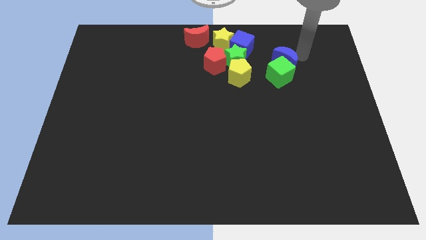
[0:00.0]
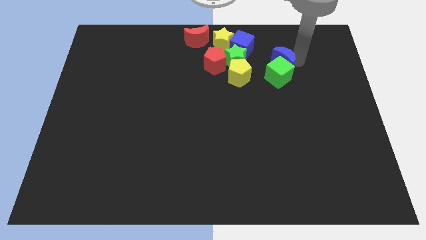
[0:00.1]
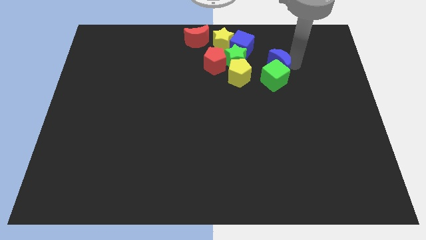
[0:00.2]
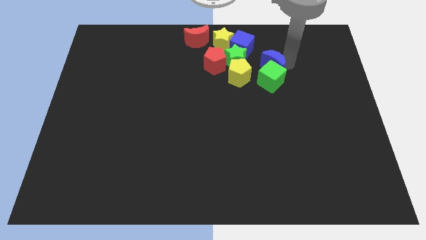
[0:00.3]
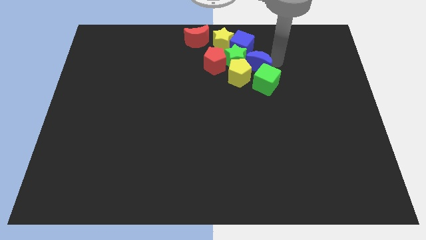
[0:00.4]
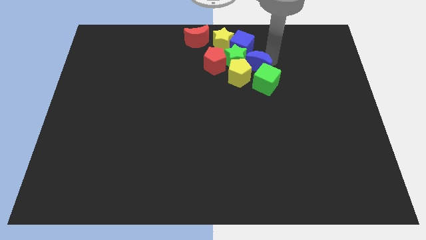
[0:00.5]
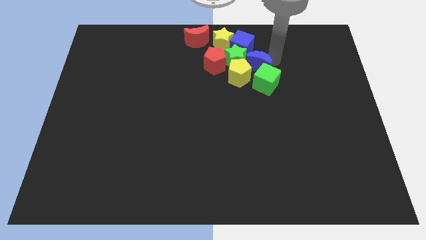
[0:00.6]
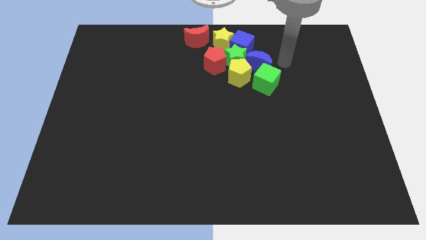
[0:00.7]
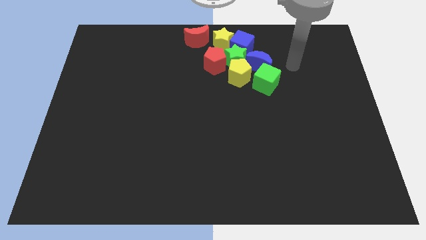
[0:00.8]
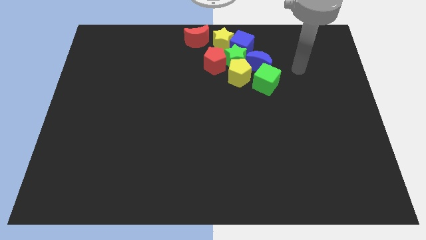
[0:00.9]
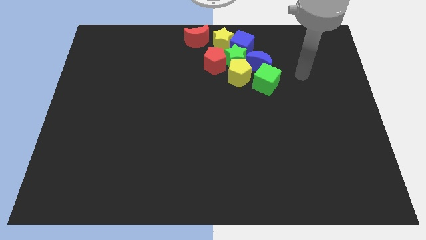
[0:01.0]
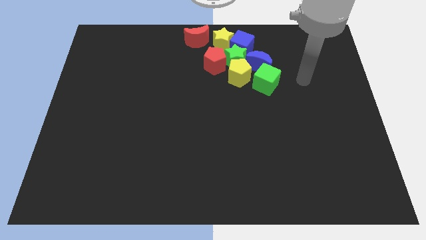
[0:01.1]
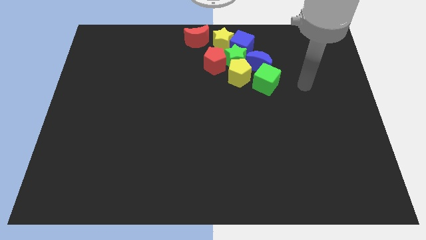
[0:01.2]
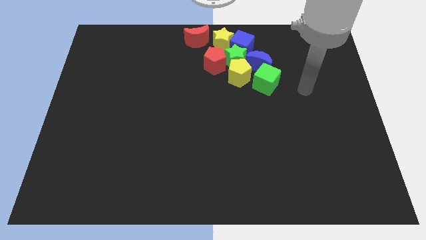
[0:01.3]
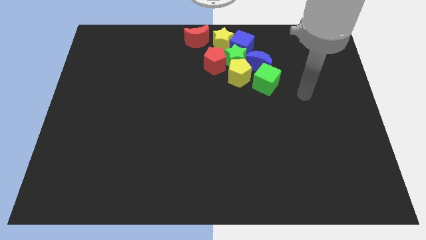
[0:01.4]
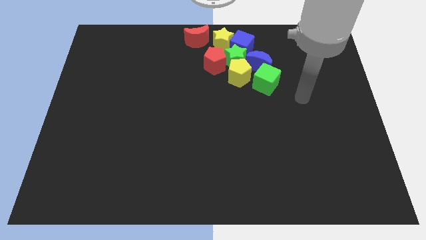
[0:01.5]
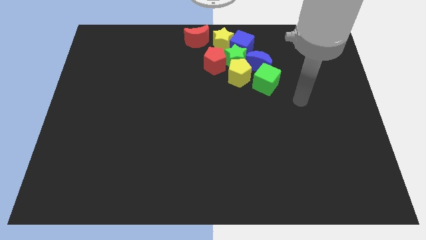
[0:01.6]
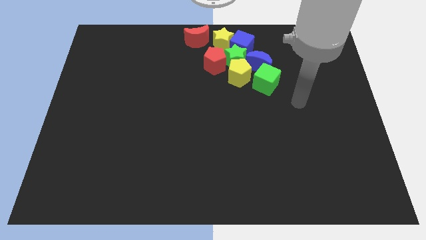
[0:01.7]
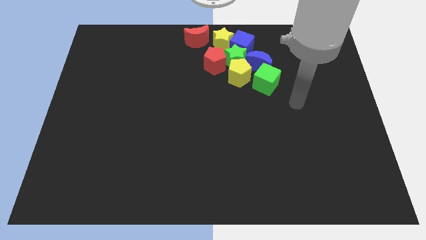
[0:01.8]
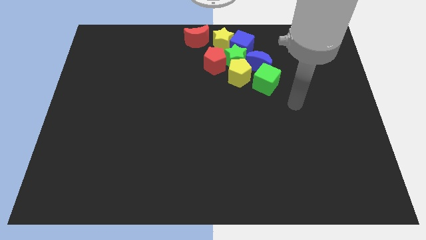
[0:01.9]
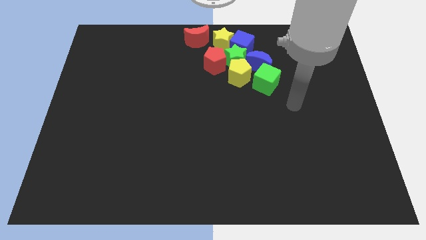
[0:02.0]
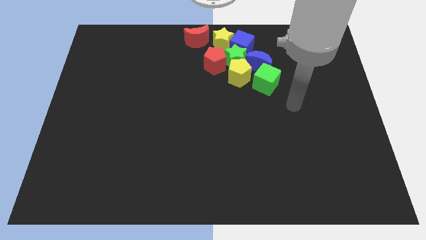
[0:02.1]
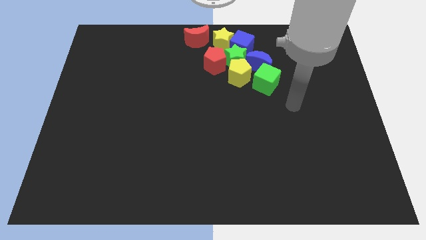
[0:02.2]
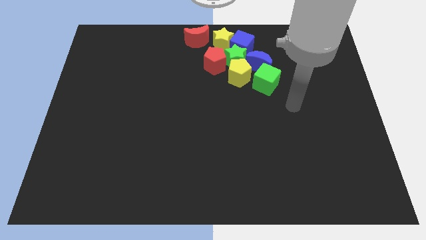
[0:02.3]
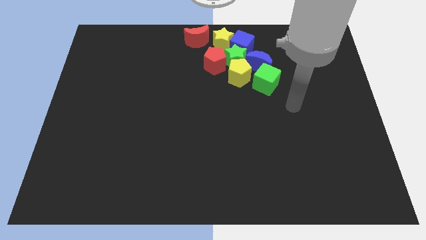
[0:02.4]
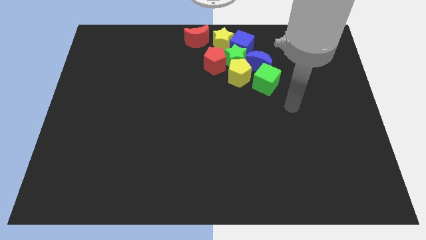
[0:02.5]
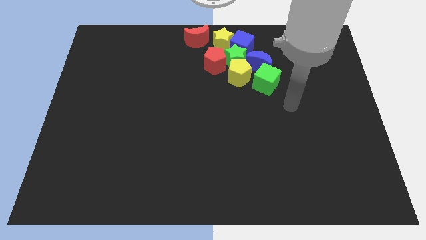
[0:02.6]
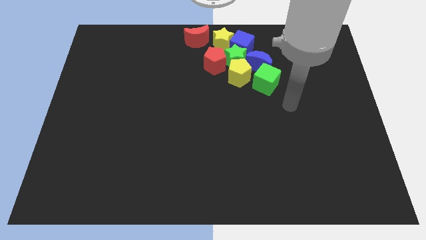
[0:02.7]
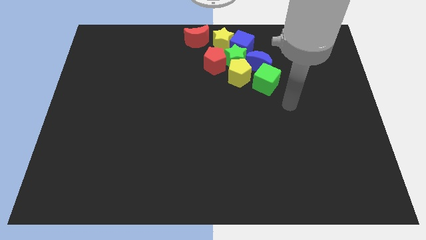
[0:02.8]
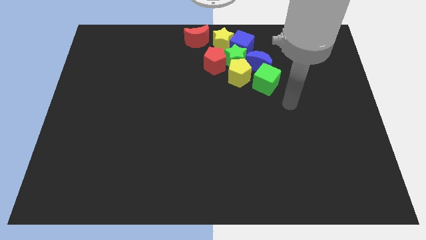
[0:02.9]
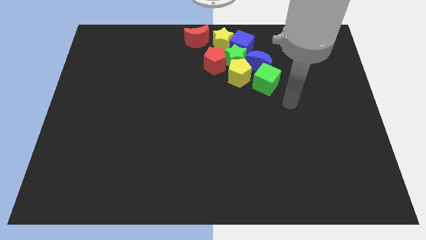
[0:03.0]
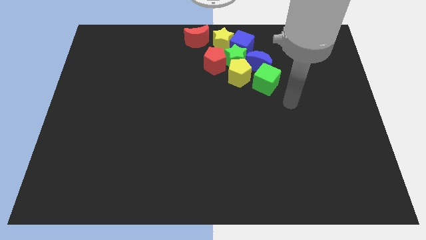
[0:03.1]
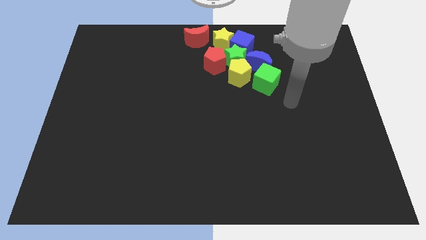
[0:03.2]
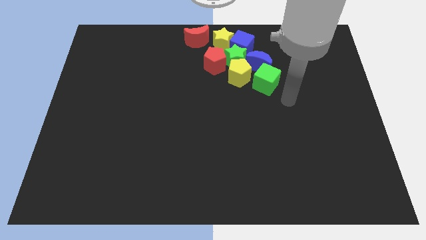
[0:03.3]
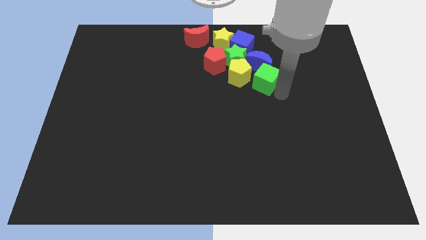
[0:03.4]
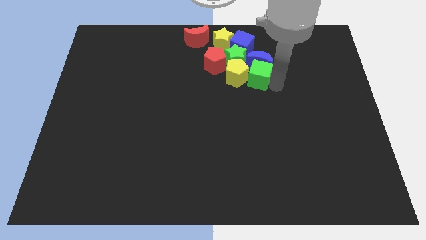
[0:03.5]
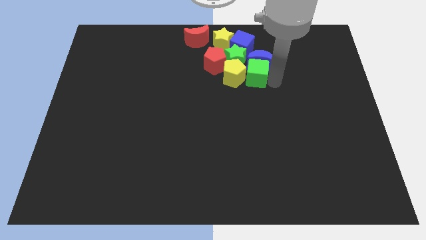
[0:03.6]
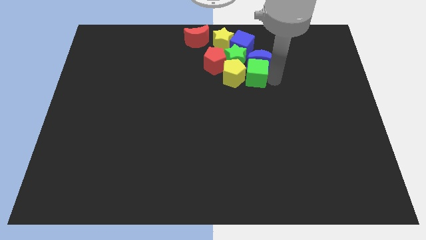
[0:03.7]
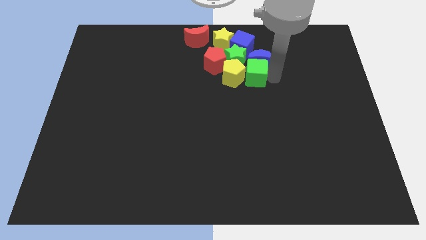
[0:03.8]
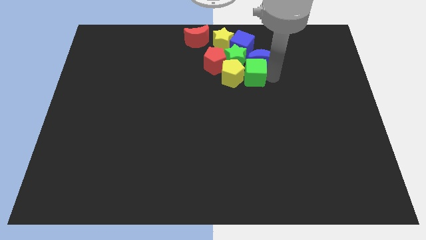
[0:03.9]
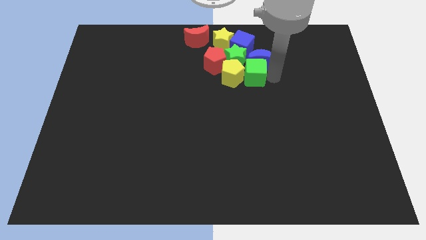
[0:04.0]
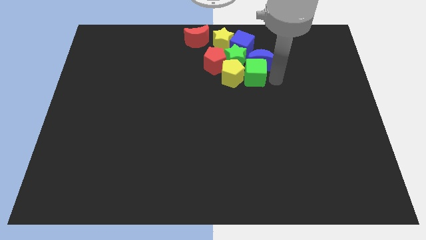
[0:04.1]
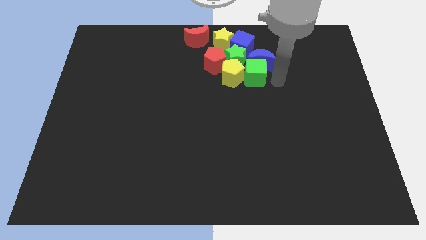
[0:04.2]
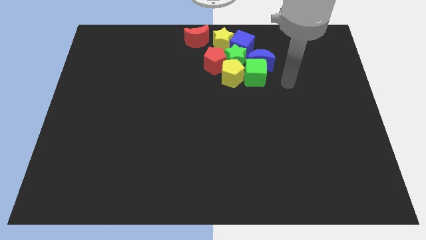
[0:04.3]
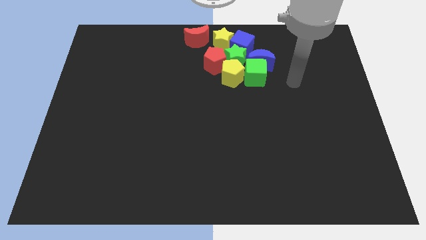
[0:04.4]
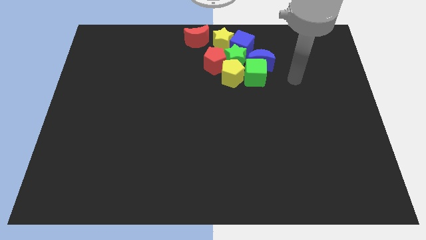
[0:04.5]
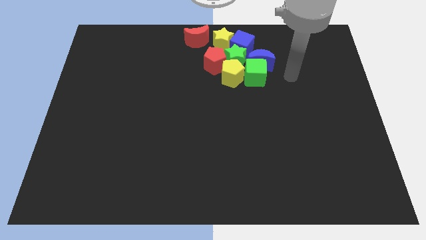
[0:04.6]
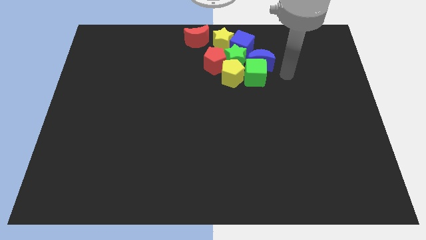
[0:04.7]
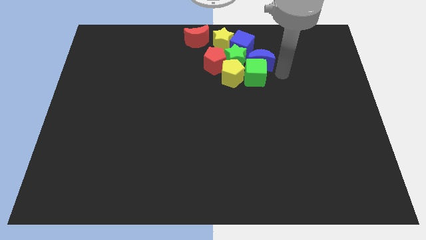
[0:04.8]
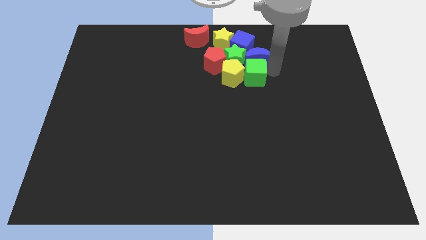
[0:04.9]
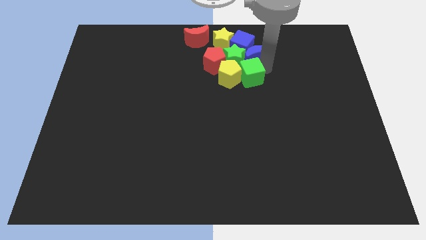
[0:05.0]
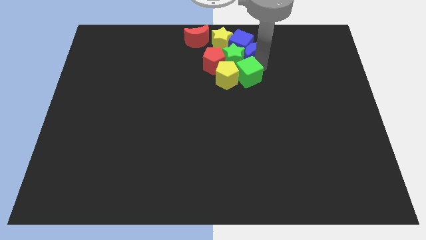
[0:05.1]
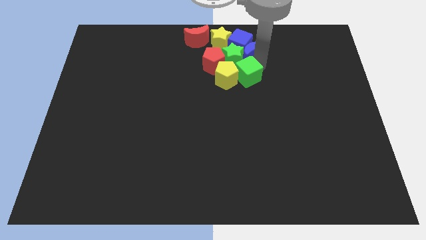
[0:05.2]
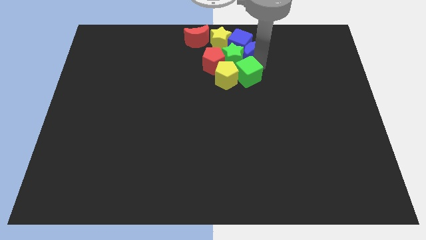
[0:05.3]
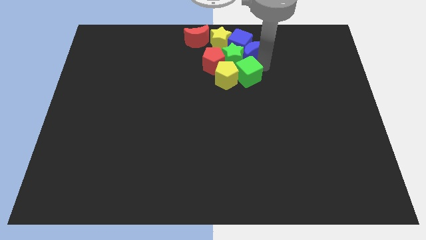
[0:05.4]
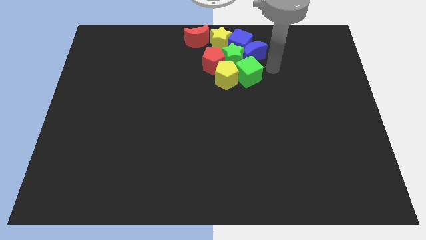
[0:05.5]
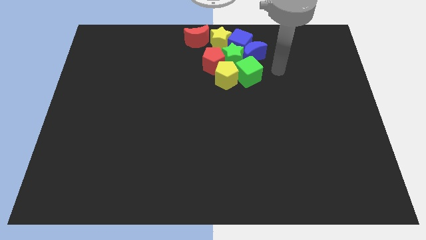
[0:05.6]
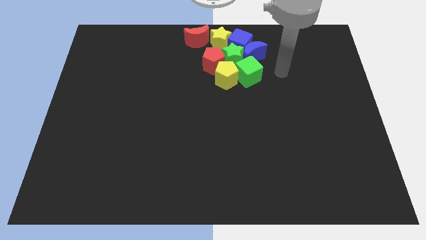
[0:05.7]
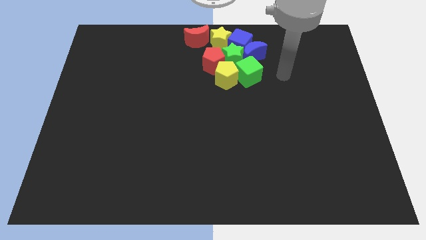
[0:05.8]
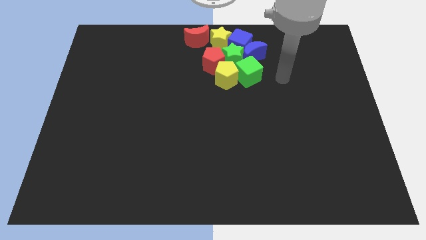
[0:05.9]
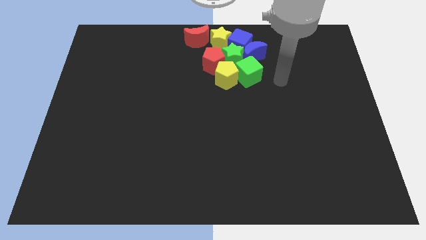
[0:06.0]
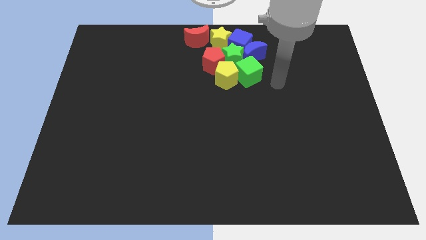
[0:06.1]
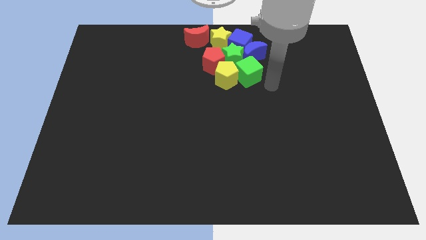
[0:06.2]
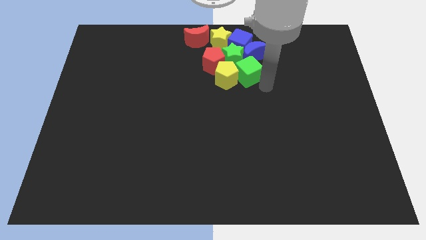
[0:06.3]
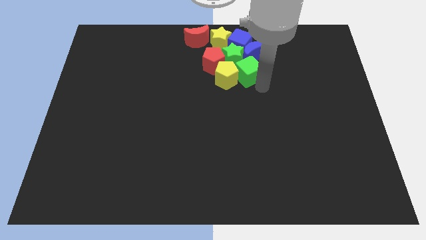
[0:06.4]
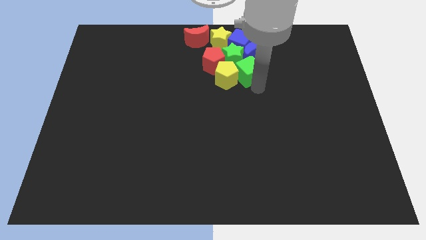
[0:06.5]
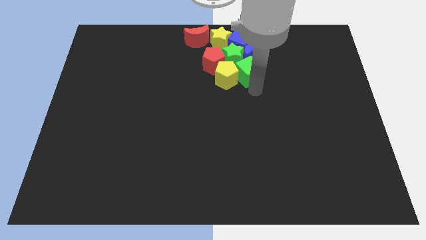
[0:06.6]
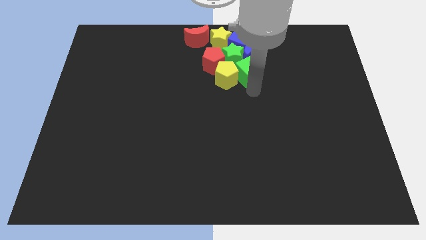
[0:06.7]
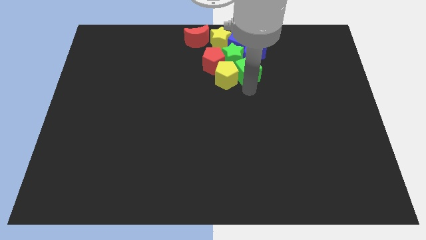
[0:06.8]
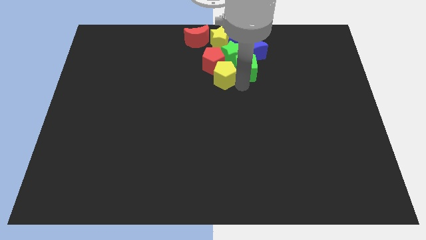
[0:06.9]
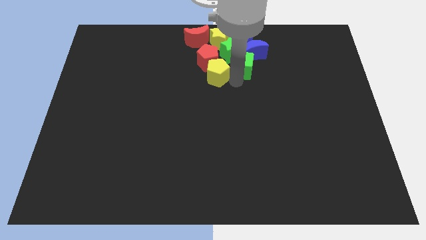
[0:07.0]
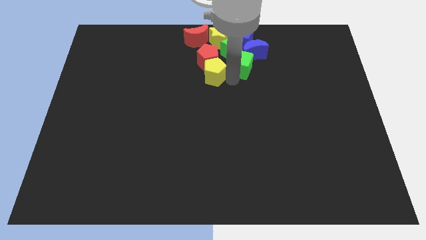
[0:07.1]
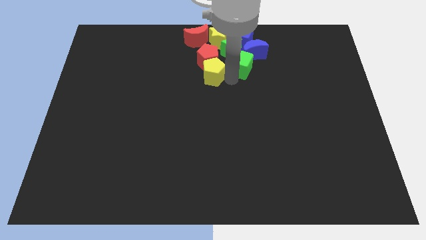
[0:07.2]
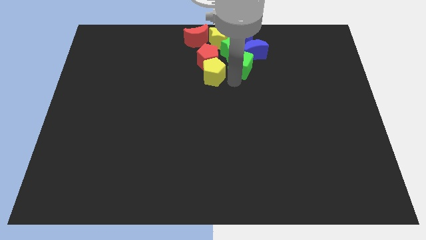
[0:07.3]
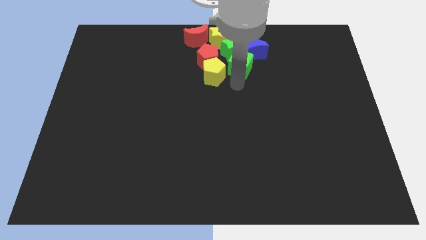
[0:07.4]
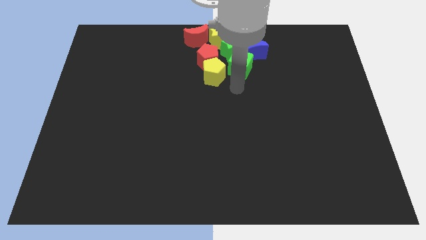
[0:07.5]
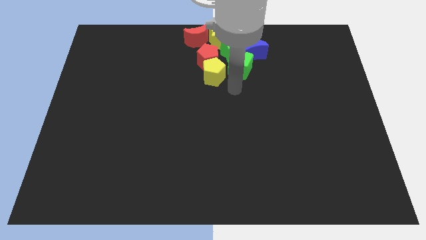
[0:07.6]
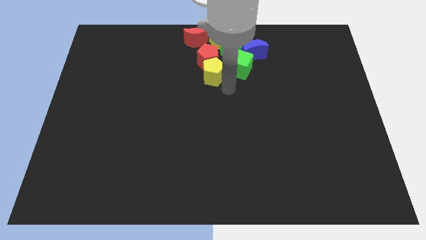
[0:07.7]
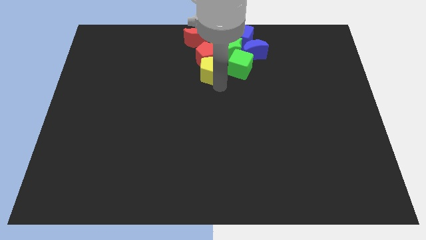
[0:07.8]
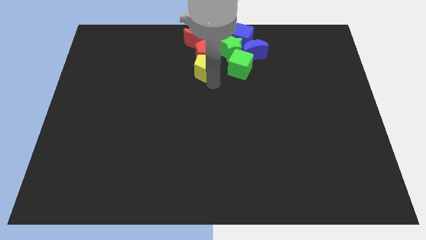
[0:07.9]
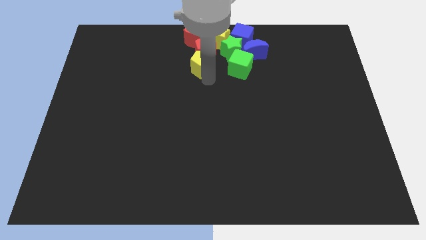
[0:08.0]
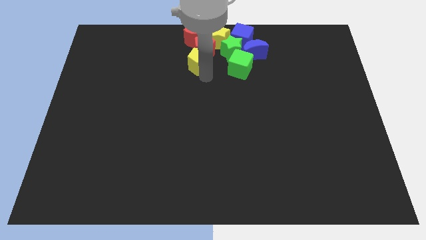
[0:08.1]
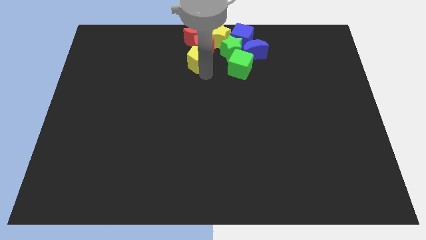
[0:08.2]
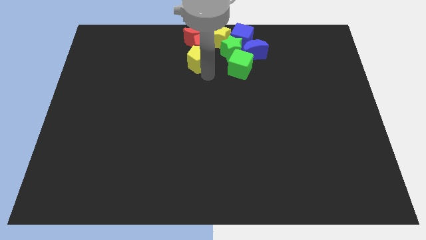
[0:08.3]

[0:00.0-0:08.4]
push the blue moon to right of green star

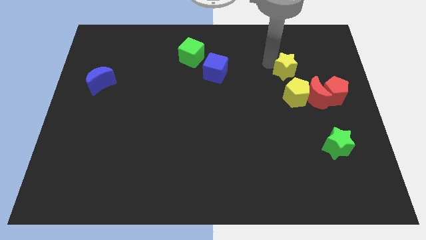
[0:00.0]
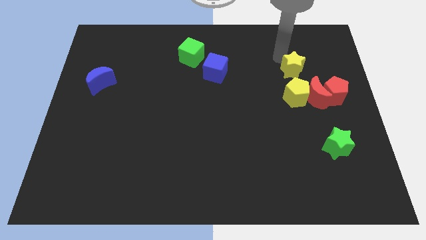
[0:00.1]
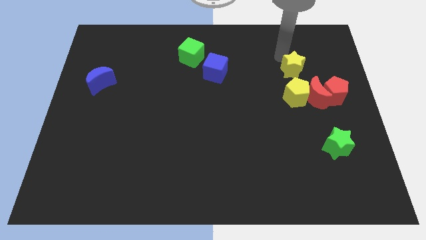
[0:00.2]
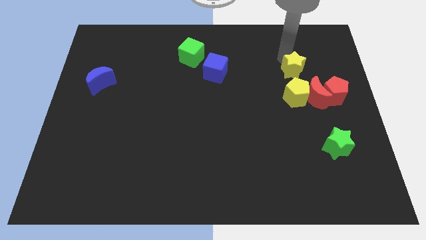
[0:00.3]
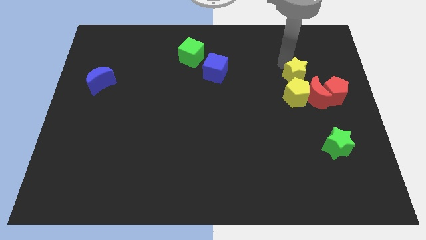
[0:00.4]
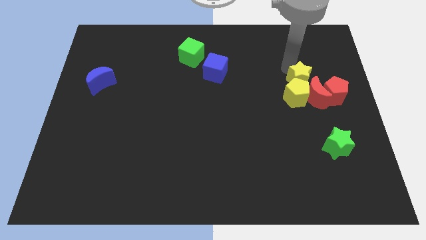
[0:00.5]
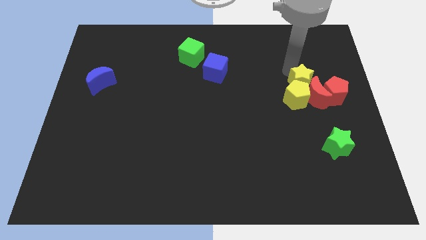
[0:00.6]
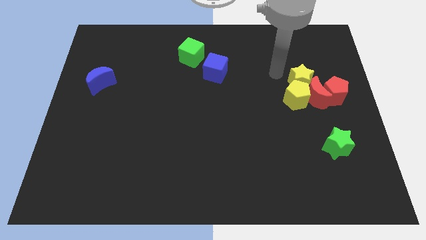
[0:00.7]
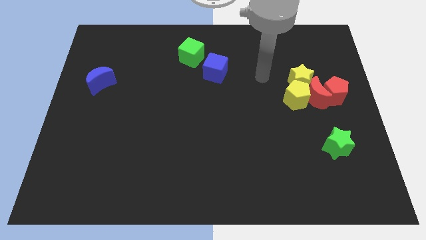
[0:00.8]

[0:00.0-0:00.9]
move the yellow star above the yellow penatgon
